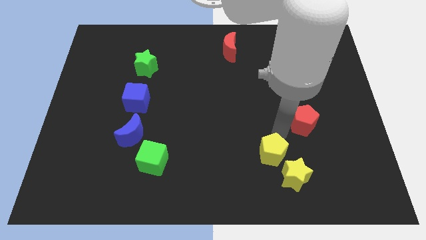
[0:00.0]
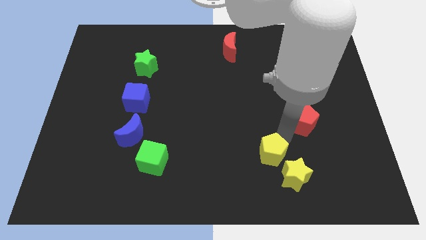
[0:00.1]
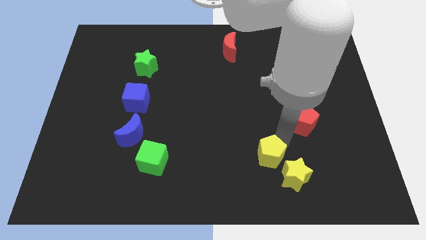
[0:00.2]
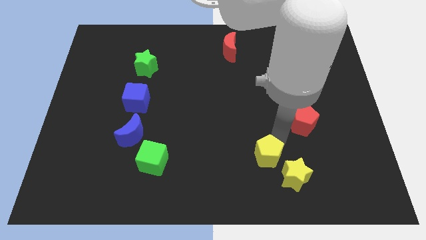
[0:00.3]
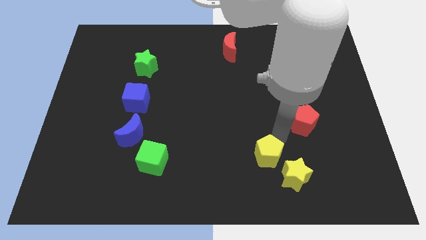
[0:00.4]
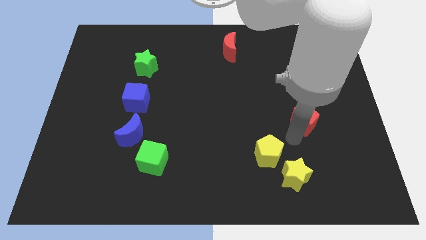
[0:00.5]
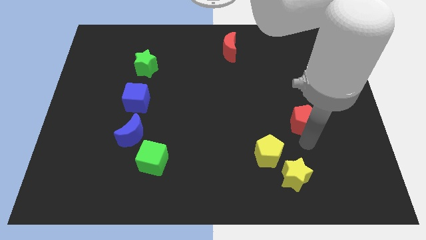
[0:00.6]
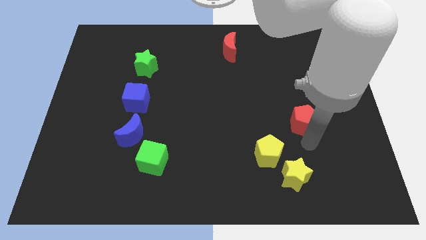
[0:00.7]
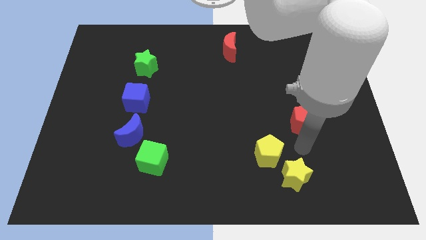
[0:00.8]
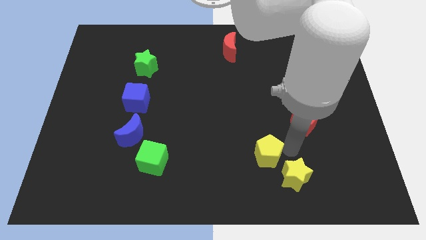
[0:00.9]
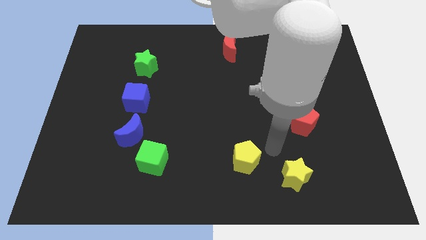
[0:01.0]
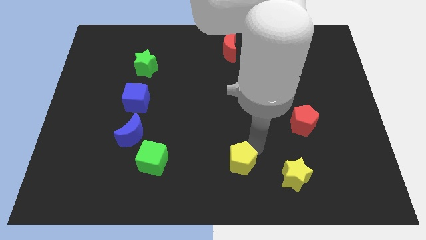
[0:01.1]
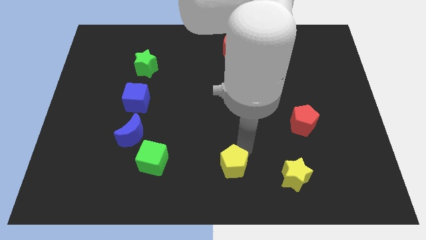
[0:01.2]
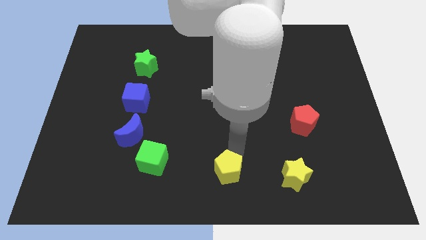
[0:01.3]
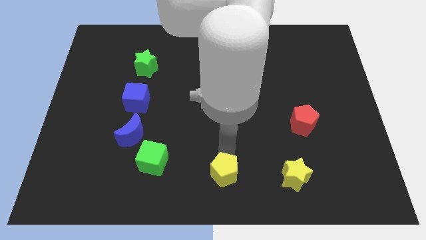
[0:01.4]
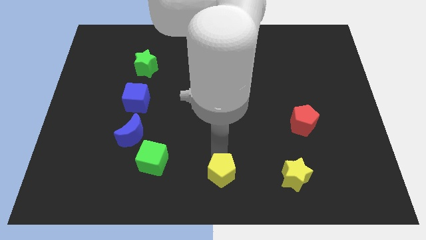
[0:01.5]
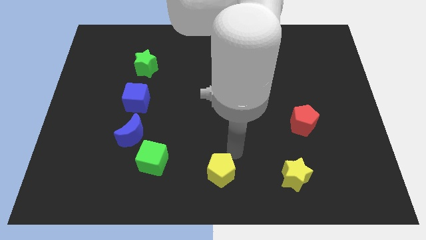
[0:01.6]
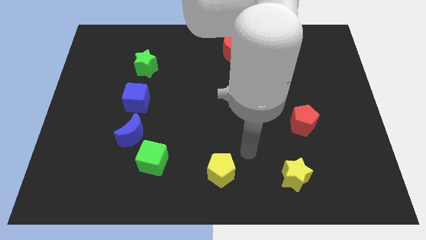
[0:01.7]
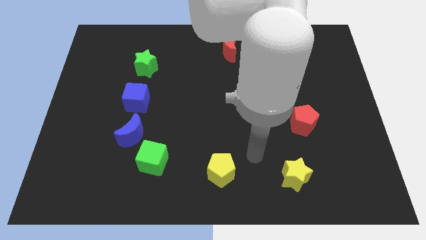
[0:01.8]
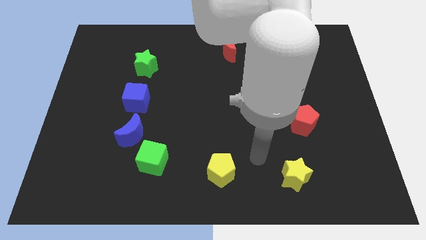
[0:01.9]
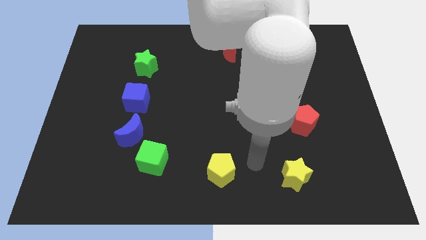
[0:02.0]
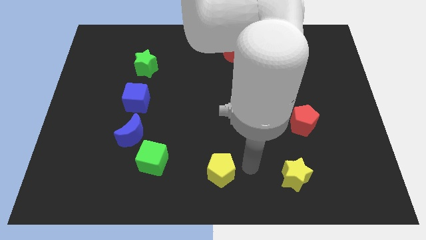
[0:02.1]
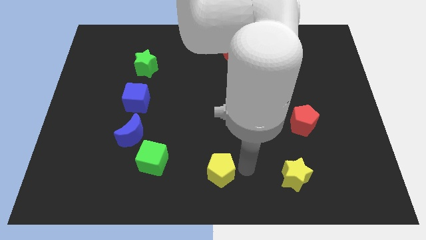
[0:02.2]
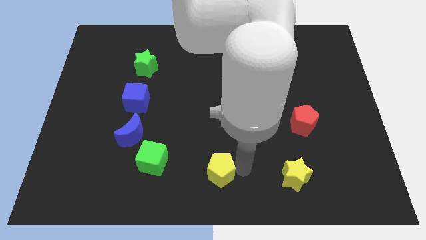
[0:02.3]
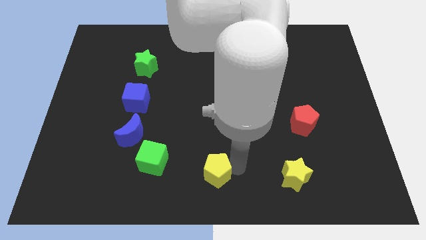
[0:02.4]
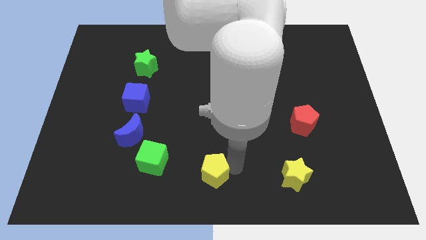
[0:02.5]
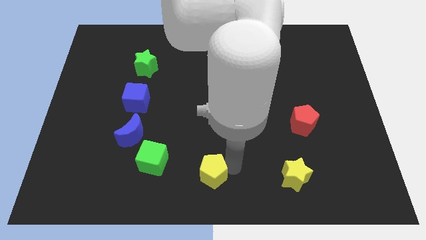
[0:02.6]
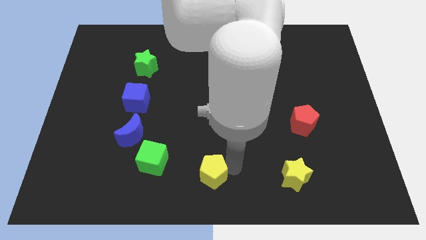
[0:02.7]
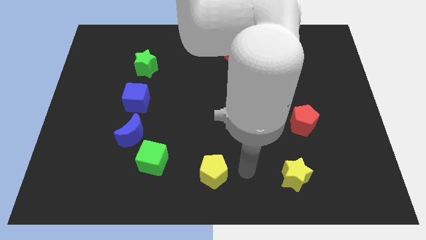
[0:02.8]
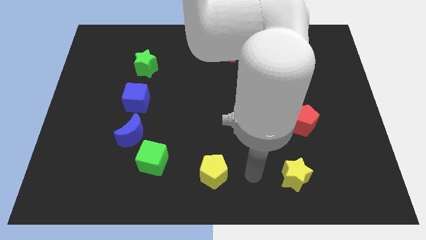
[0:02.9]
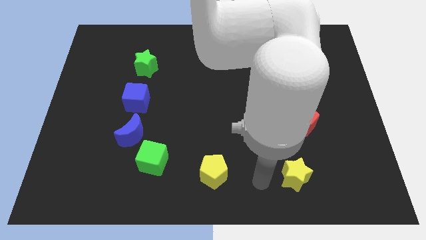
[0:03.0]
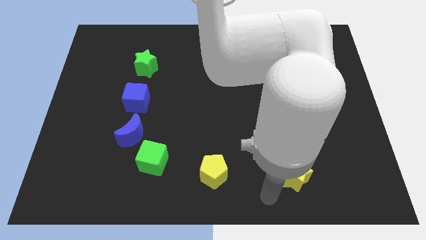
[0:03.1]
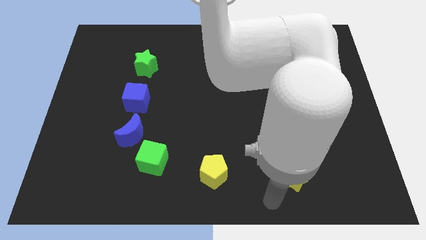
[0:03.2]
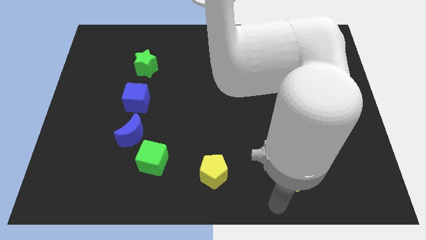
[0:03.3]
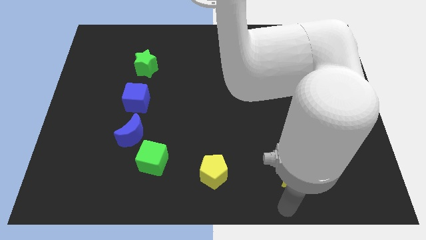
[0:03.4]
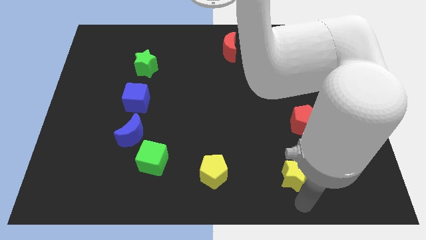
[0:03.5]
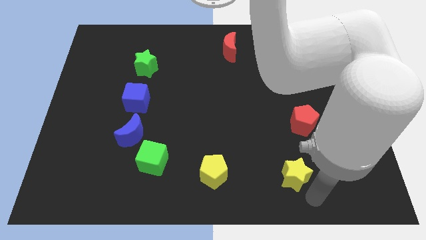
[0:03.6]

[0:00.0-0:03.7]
place the yellow pentagon in between the yellow star and the green cube

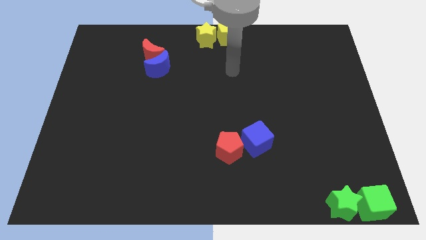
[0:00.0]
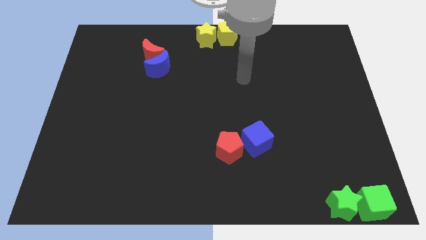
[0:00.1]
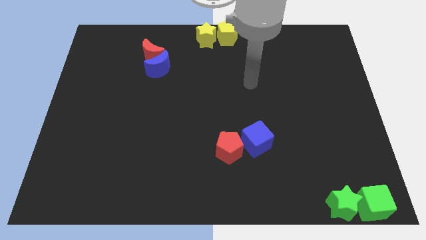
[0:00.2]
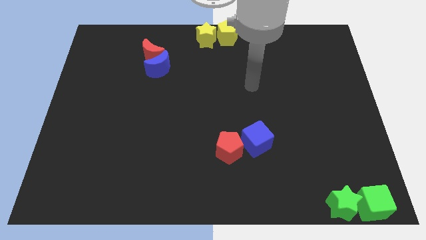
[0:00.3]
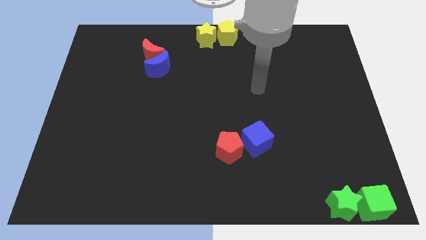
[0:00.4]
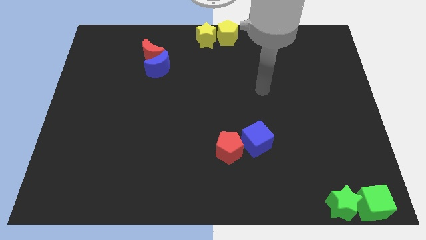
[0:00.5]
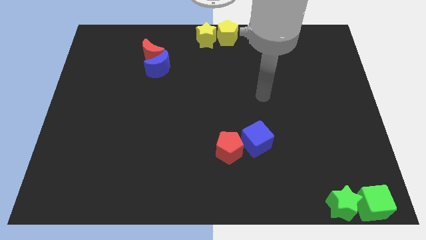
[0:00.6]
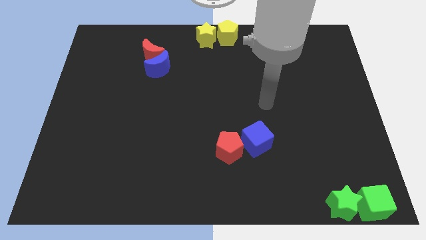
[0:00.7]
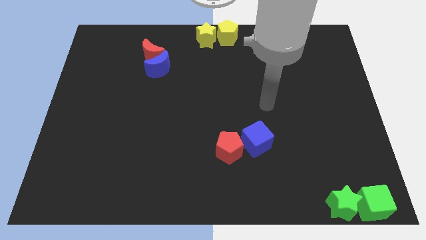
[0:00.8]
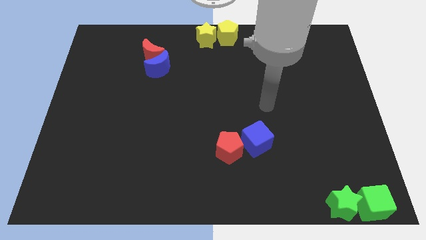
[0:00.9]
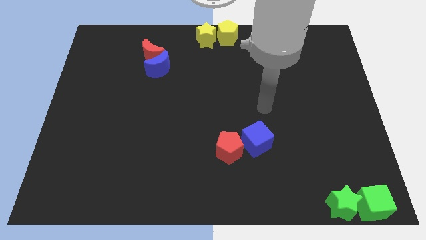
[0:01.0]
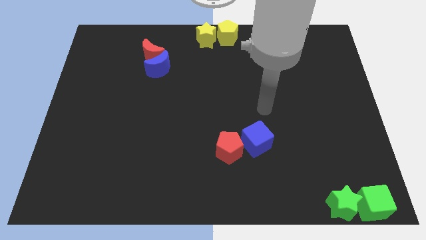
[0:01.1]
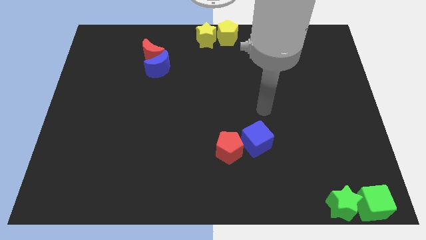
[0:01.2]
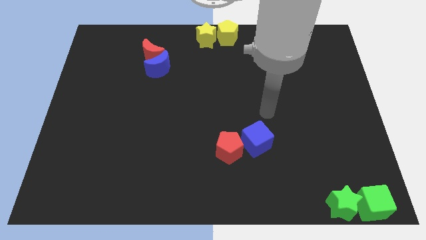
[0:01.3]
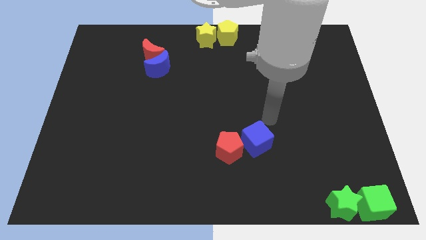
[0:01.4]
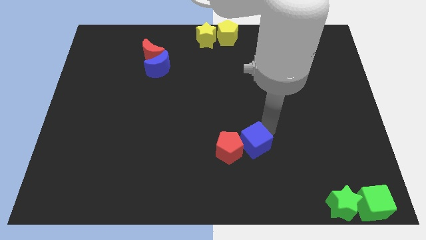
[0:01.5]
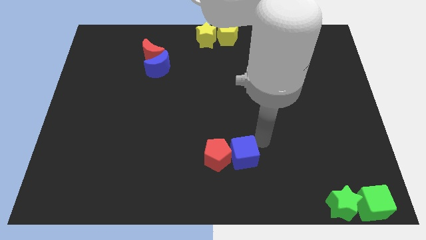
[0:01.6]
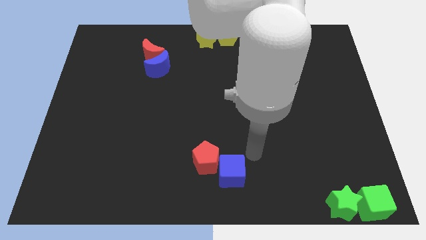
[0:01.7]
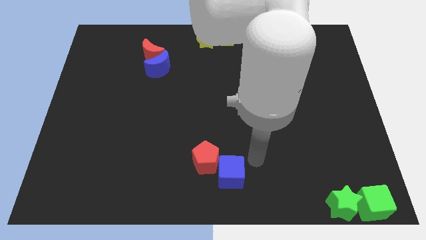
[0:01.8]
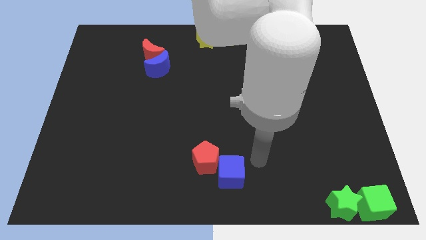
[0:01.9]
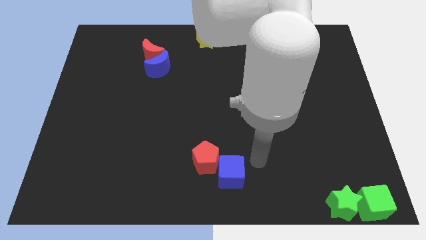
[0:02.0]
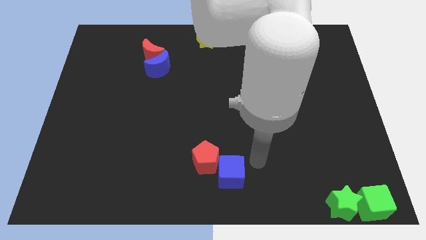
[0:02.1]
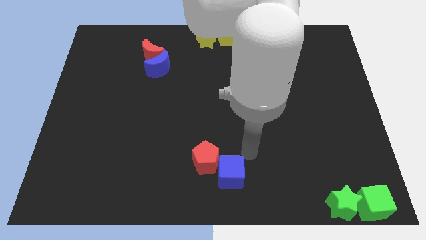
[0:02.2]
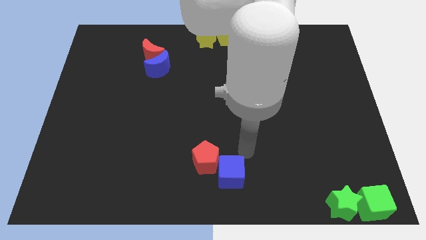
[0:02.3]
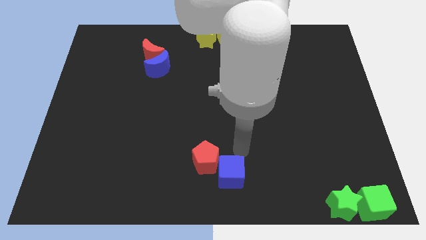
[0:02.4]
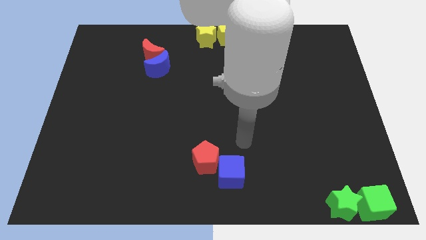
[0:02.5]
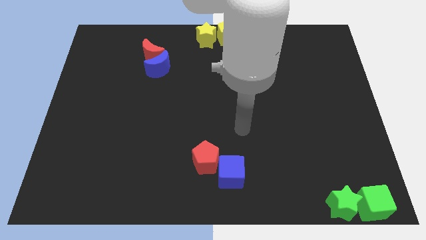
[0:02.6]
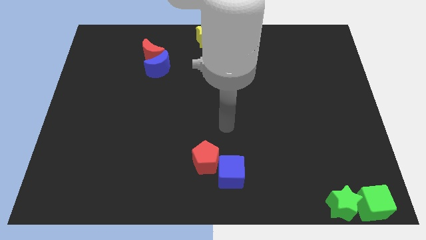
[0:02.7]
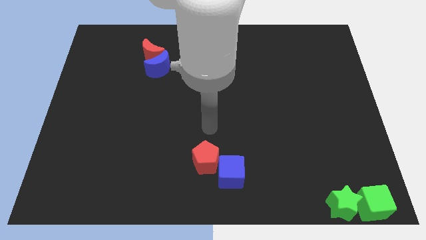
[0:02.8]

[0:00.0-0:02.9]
push the red pentagon and blue cube together towards the bottom center of the board

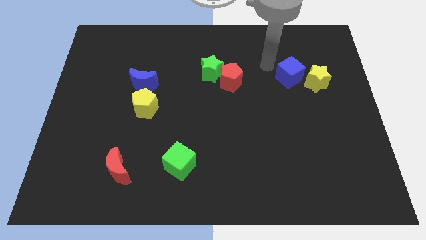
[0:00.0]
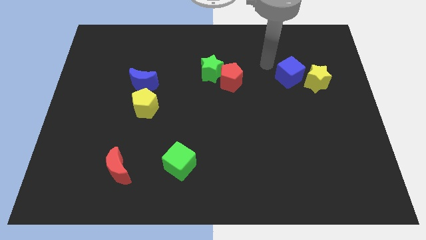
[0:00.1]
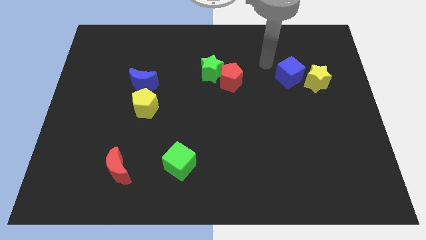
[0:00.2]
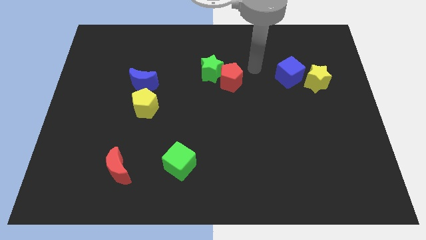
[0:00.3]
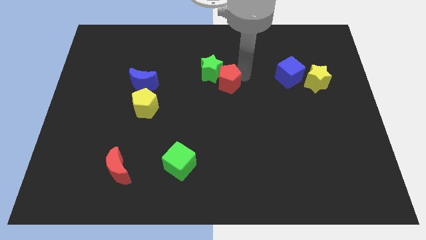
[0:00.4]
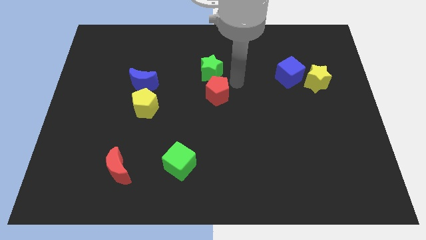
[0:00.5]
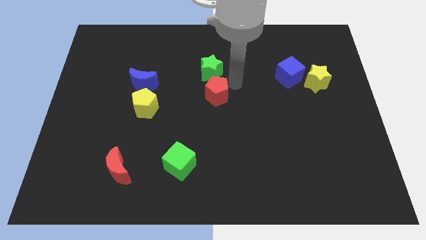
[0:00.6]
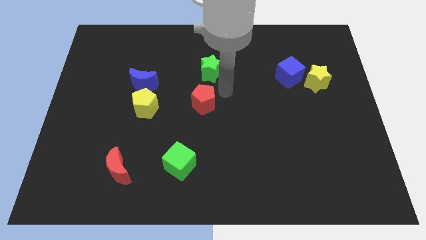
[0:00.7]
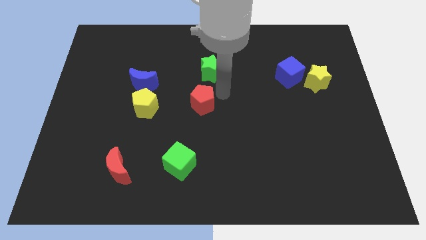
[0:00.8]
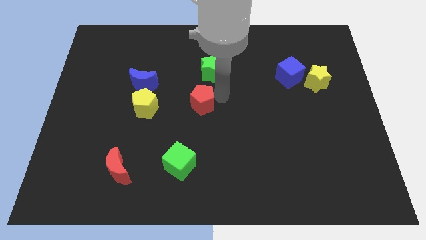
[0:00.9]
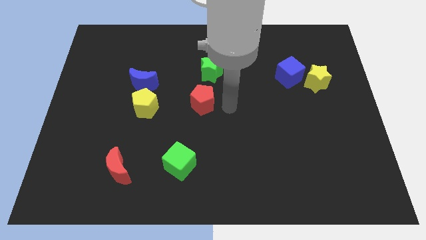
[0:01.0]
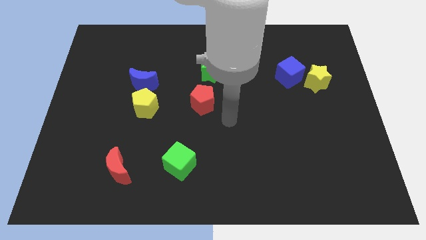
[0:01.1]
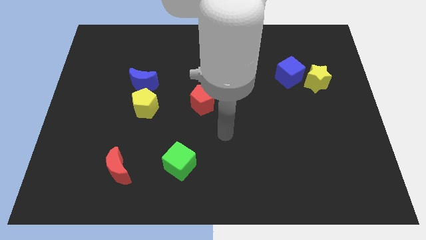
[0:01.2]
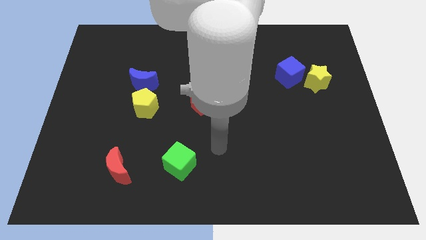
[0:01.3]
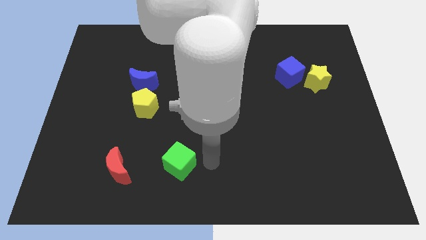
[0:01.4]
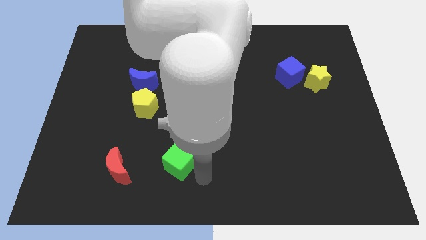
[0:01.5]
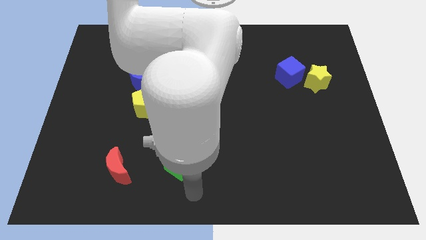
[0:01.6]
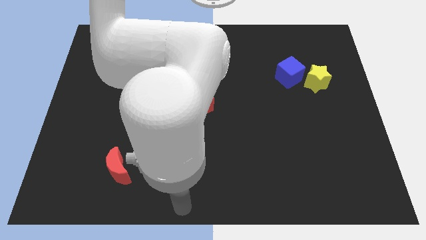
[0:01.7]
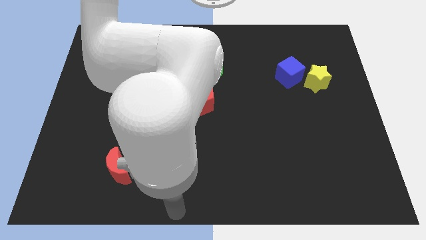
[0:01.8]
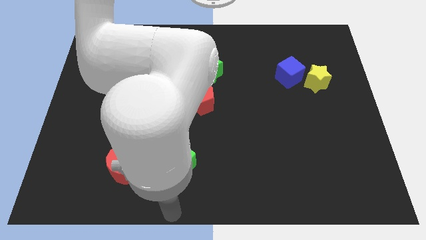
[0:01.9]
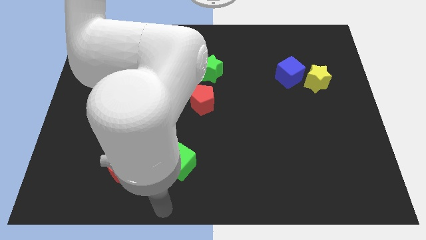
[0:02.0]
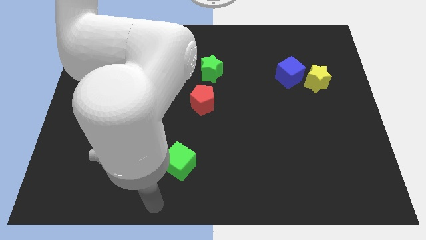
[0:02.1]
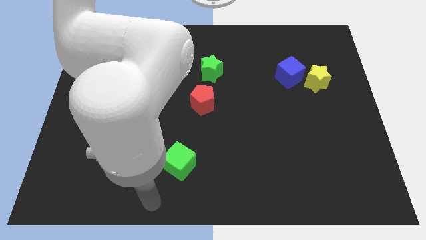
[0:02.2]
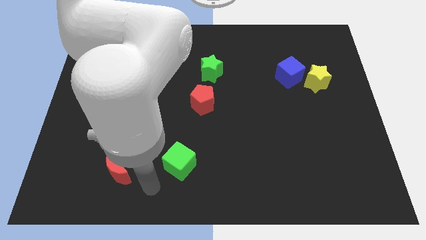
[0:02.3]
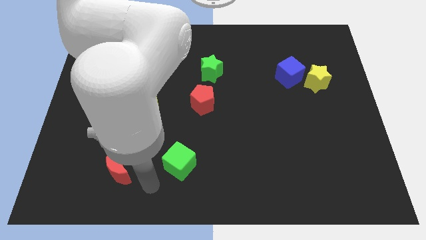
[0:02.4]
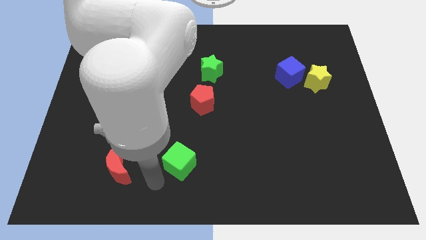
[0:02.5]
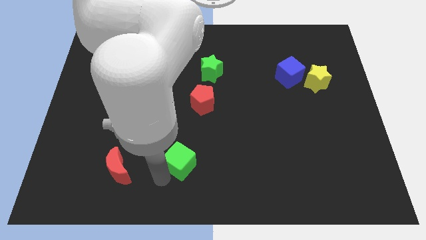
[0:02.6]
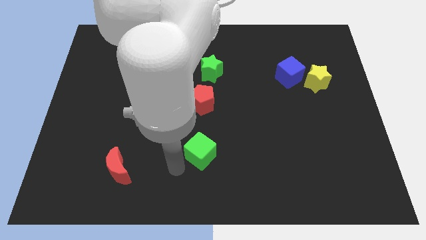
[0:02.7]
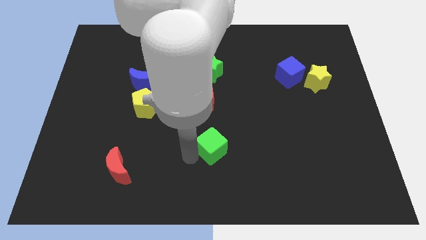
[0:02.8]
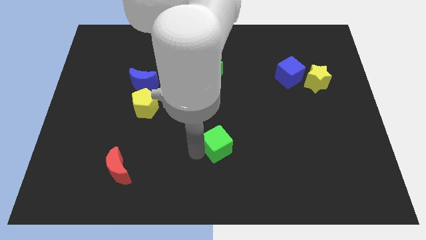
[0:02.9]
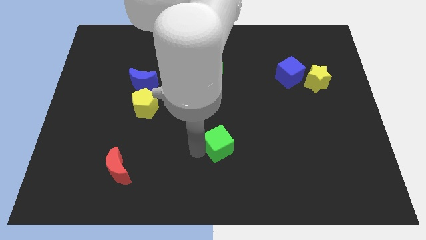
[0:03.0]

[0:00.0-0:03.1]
place the red pentagon below the green star
